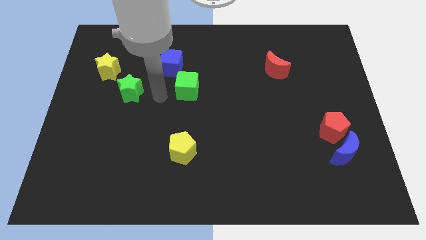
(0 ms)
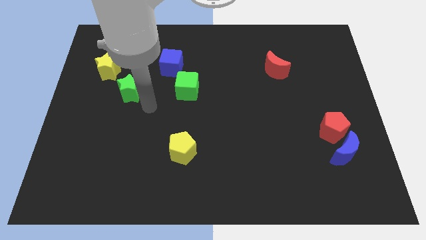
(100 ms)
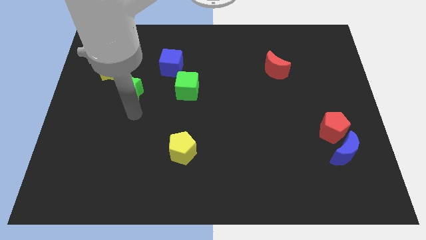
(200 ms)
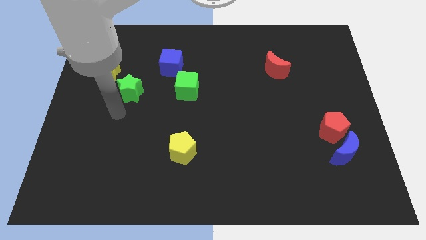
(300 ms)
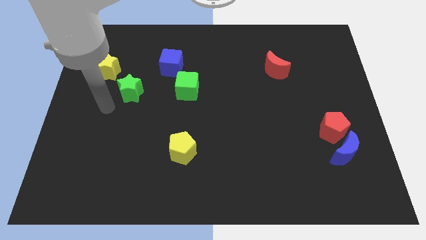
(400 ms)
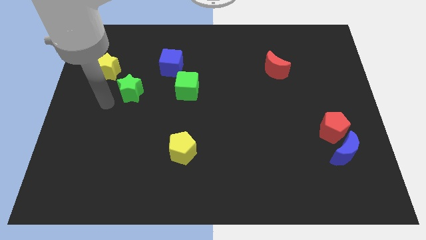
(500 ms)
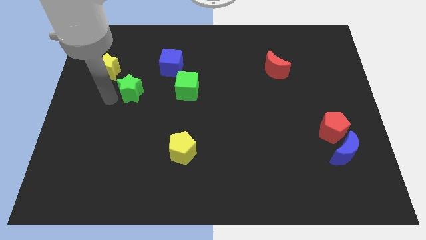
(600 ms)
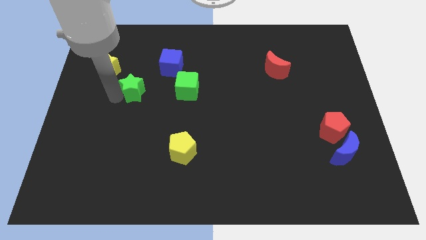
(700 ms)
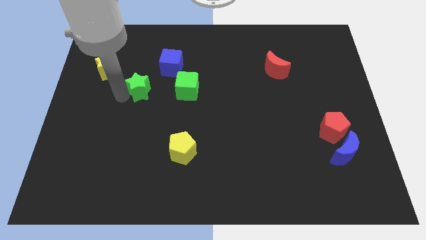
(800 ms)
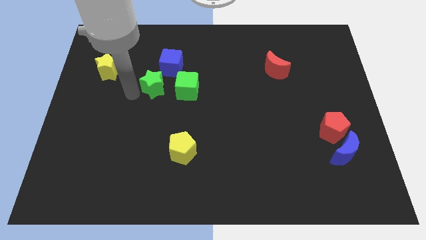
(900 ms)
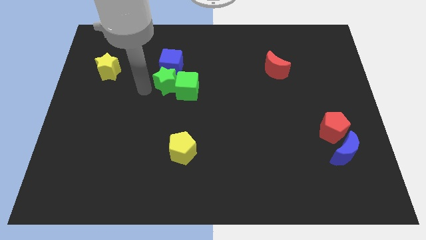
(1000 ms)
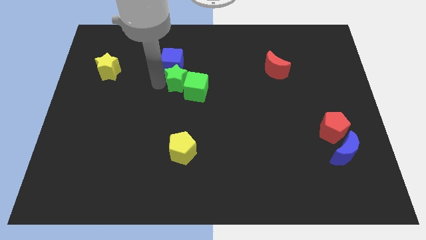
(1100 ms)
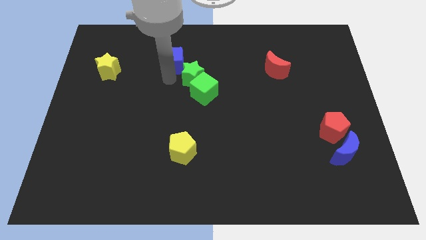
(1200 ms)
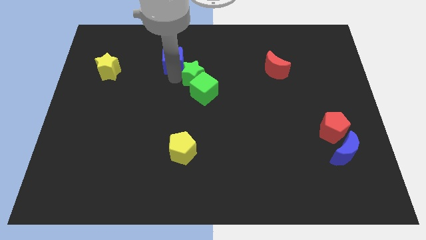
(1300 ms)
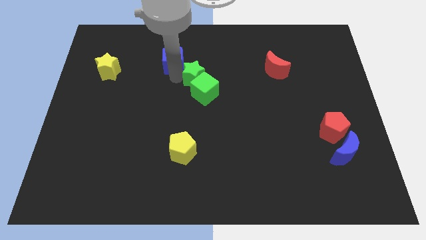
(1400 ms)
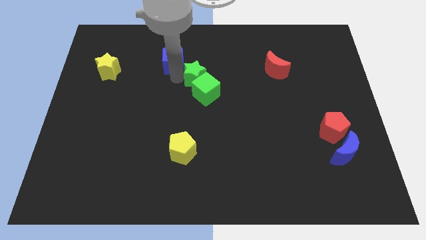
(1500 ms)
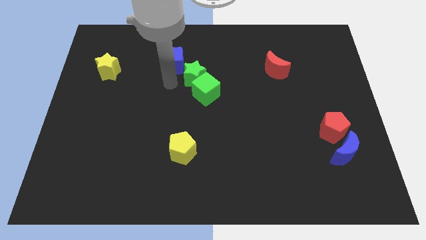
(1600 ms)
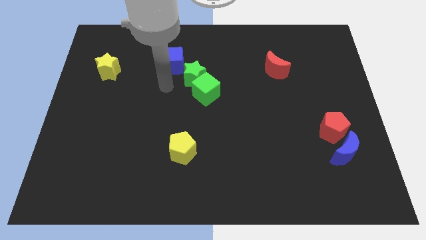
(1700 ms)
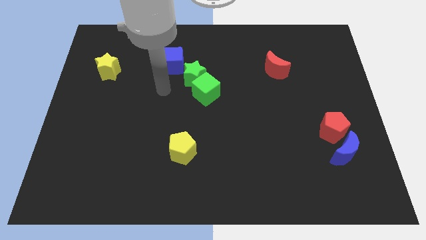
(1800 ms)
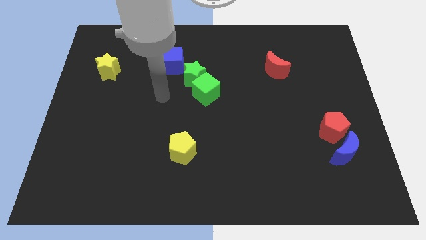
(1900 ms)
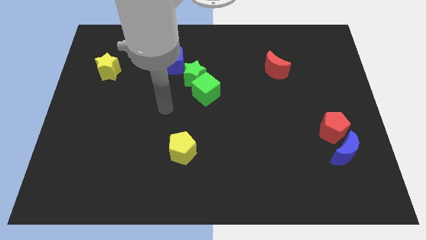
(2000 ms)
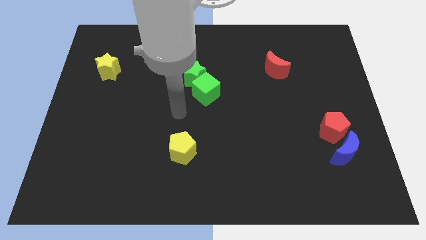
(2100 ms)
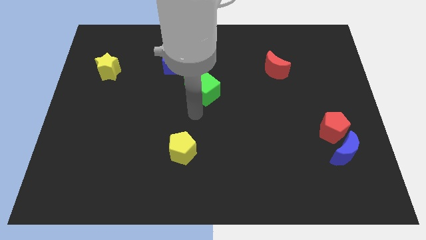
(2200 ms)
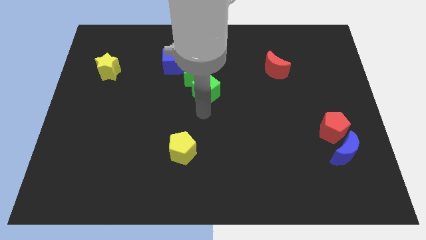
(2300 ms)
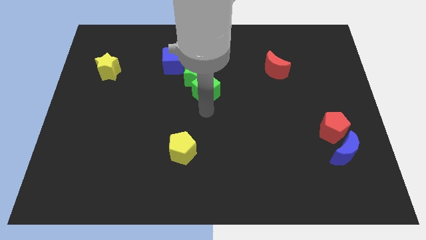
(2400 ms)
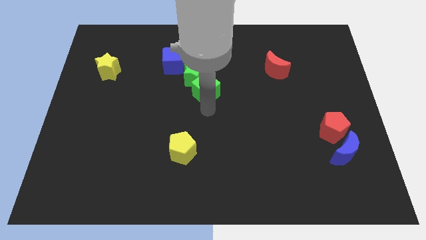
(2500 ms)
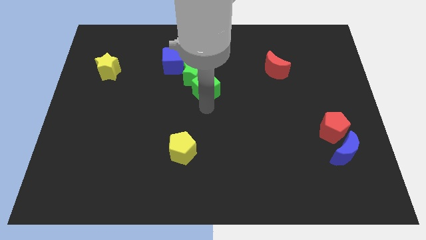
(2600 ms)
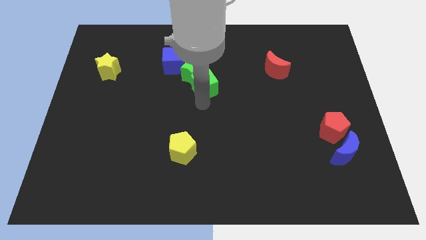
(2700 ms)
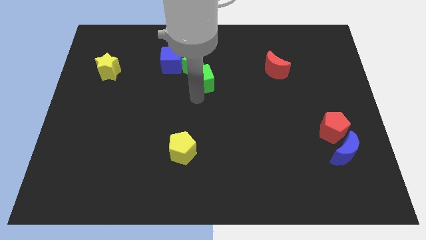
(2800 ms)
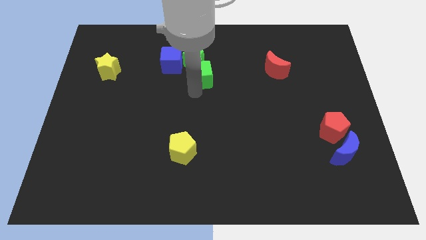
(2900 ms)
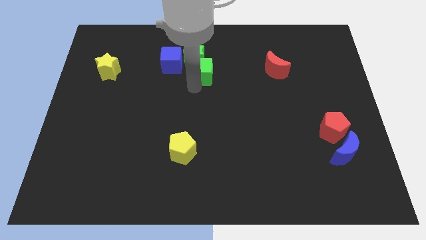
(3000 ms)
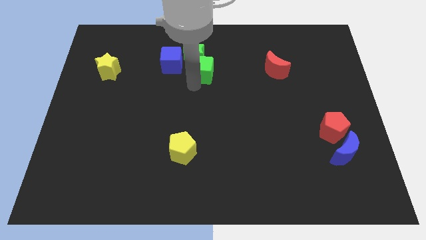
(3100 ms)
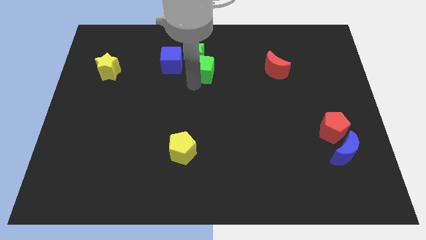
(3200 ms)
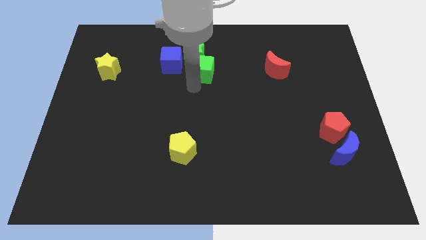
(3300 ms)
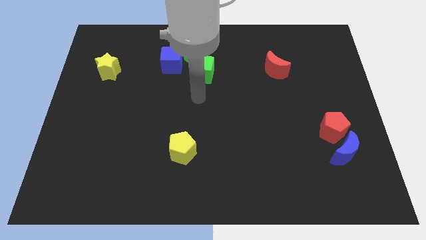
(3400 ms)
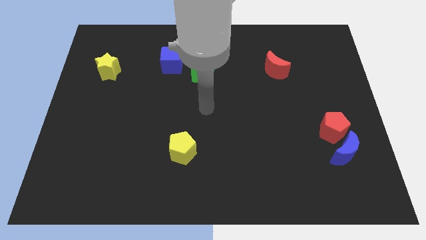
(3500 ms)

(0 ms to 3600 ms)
group up the green blocks to the right of the blue cube

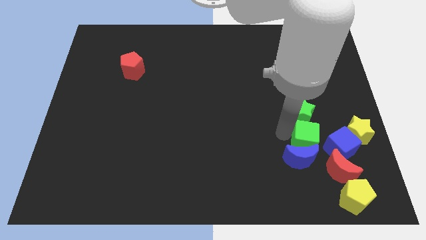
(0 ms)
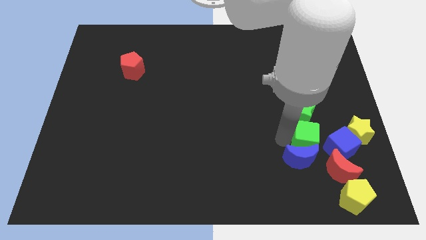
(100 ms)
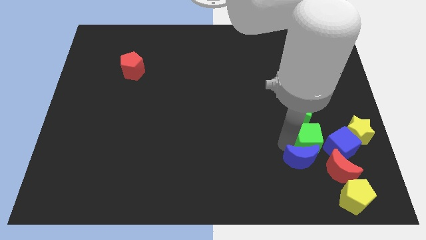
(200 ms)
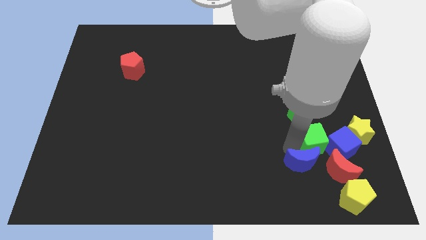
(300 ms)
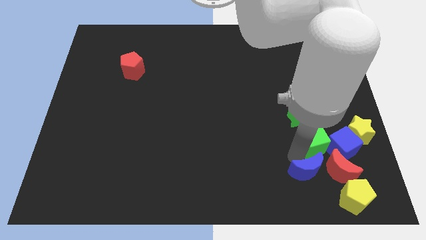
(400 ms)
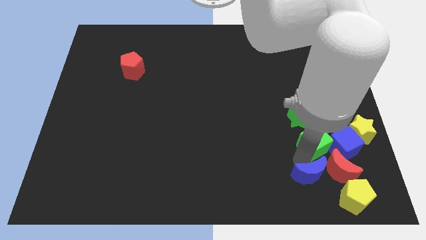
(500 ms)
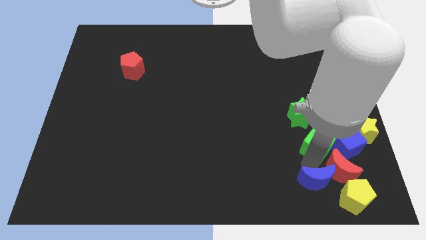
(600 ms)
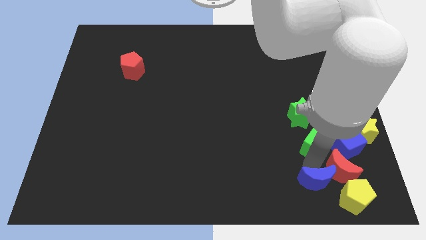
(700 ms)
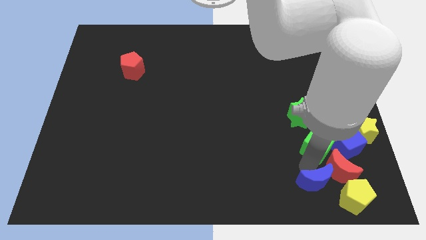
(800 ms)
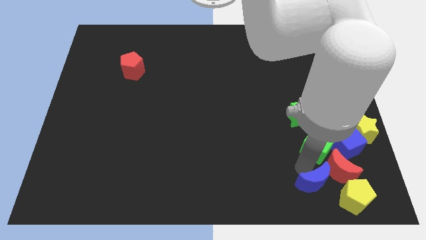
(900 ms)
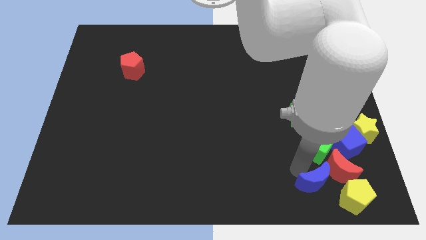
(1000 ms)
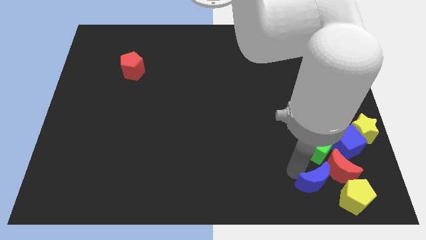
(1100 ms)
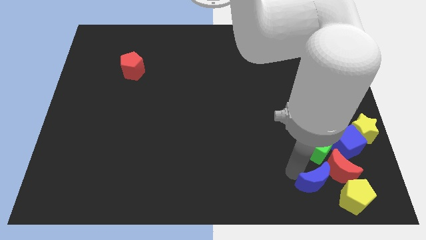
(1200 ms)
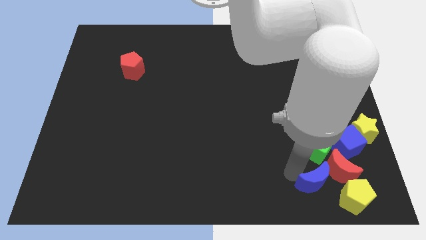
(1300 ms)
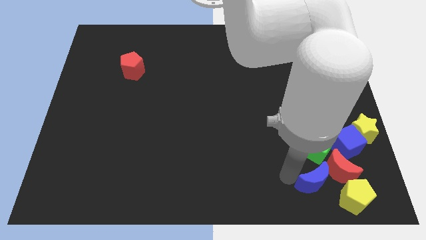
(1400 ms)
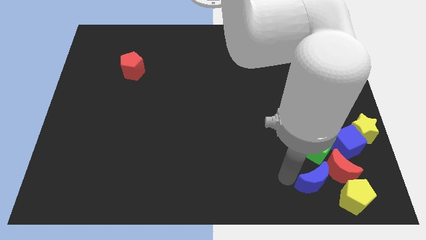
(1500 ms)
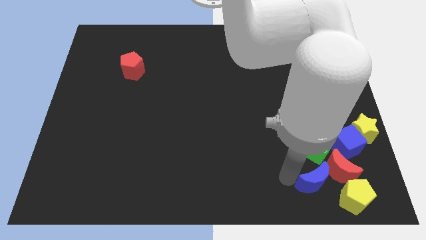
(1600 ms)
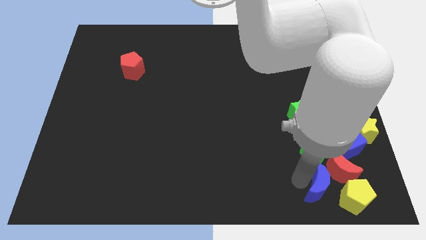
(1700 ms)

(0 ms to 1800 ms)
place the blue moon to the left of red moon

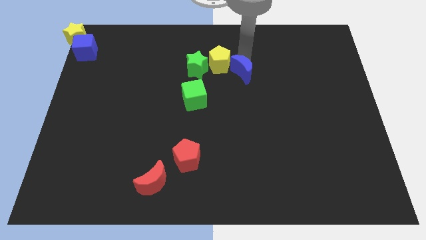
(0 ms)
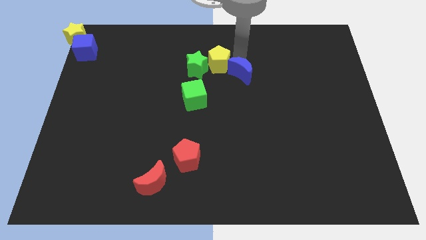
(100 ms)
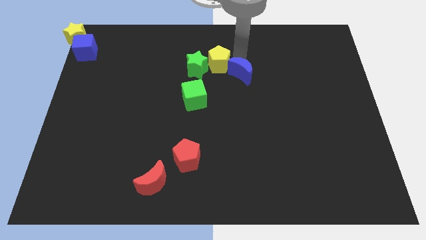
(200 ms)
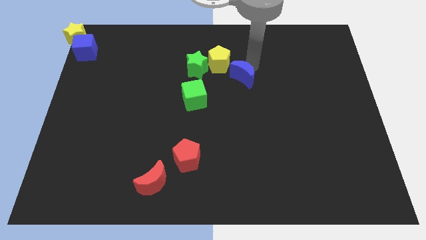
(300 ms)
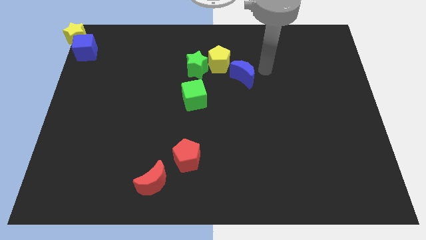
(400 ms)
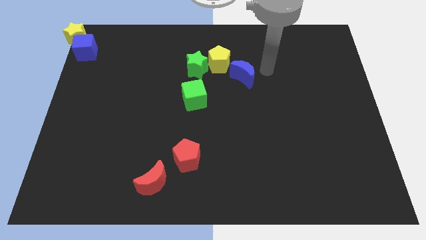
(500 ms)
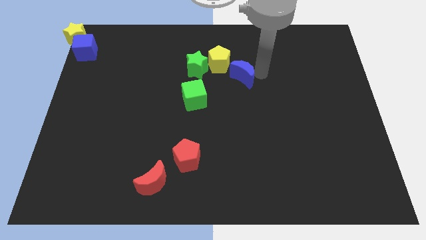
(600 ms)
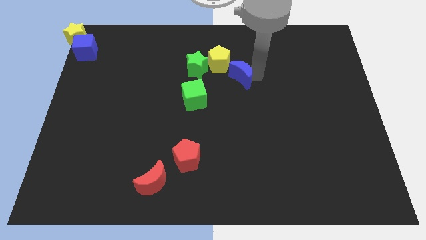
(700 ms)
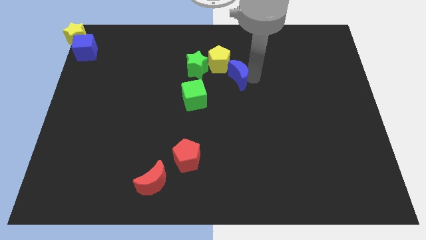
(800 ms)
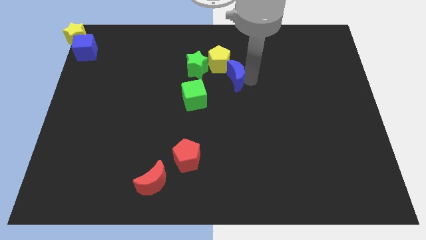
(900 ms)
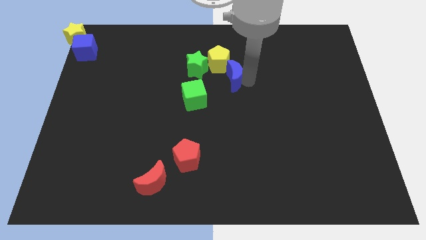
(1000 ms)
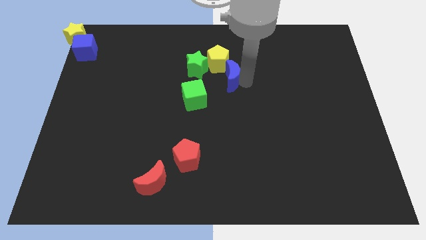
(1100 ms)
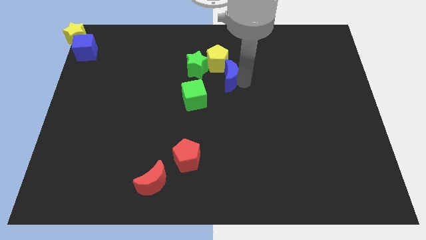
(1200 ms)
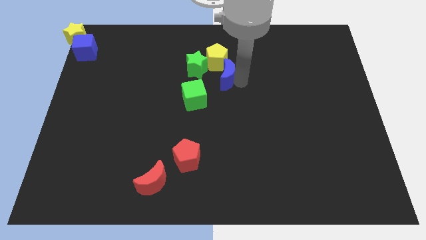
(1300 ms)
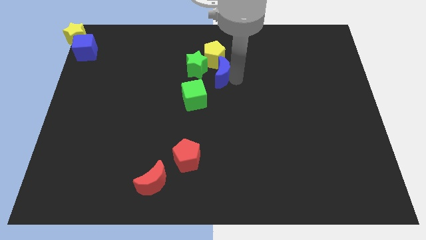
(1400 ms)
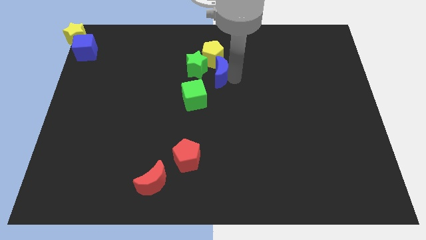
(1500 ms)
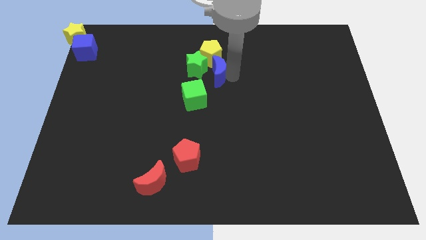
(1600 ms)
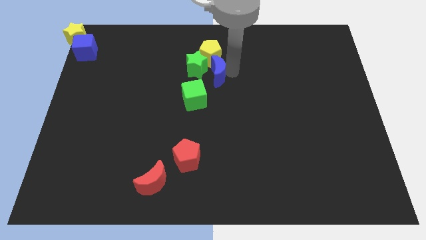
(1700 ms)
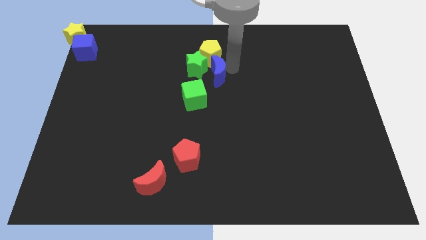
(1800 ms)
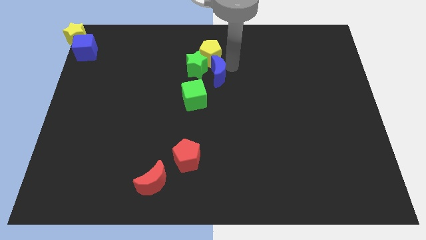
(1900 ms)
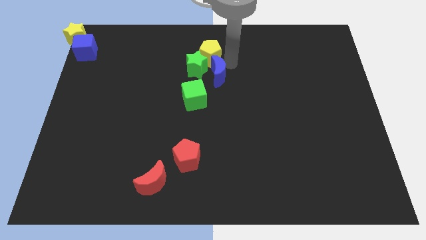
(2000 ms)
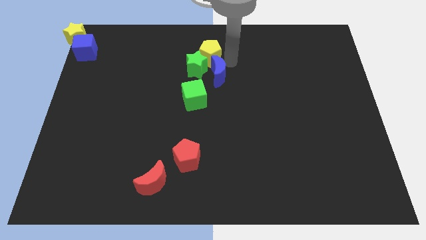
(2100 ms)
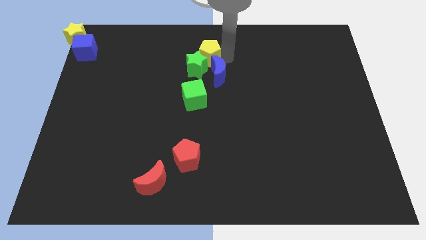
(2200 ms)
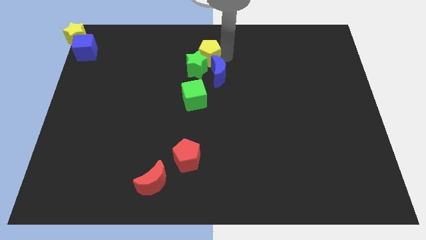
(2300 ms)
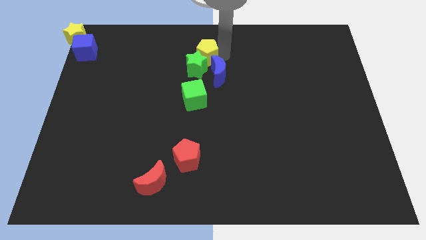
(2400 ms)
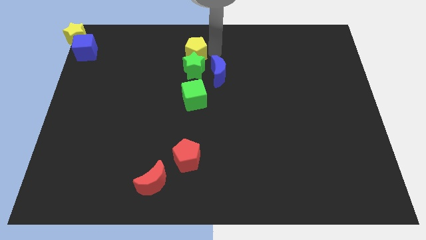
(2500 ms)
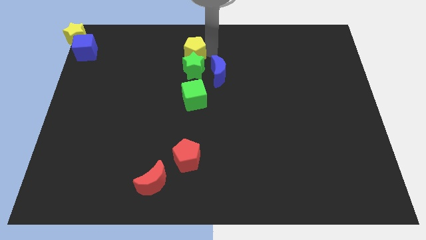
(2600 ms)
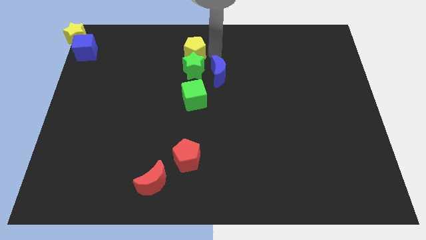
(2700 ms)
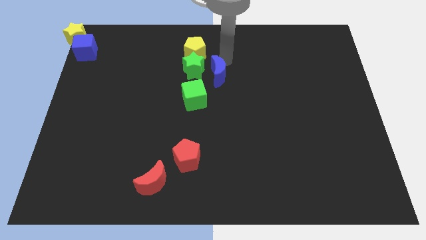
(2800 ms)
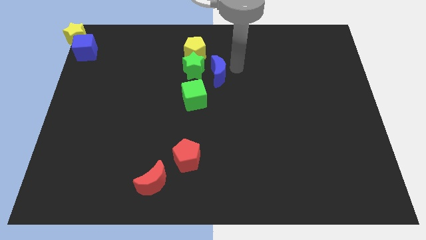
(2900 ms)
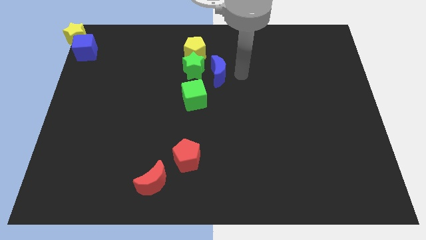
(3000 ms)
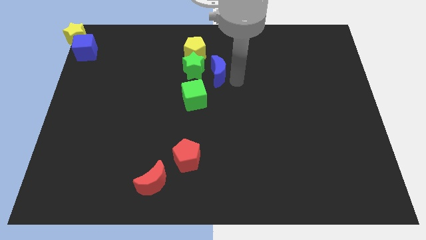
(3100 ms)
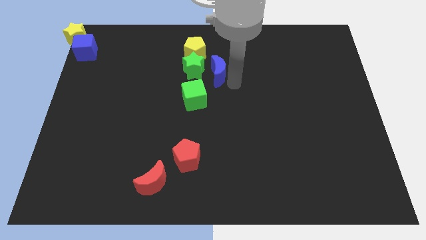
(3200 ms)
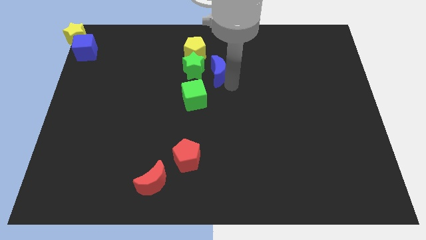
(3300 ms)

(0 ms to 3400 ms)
place yellow pentagon above green star

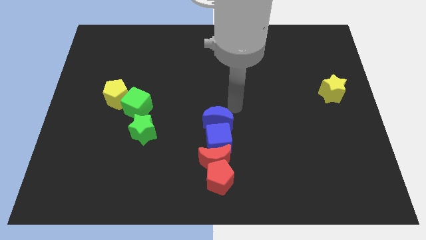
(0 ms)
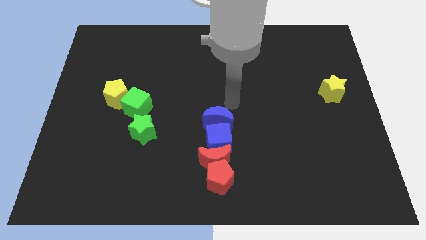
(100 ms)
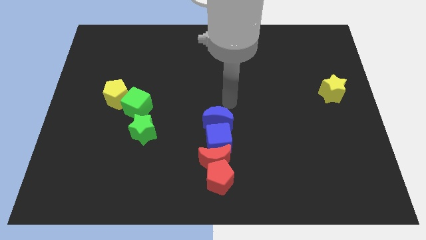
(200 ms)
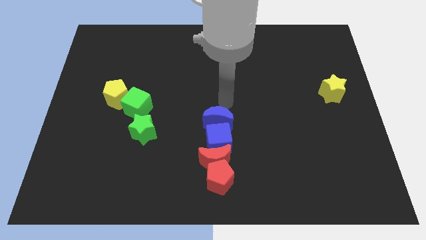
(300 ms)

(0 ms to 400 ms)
move your arm towards the top of the blue crescent
